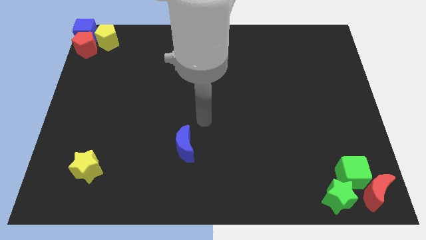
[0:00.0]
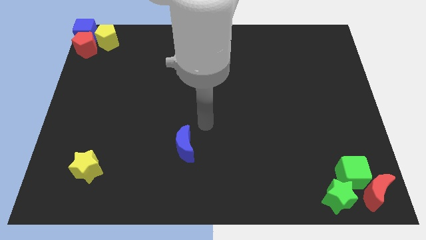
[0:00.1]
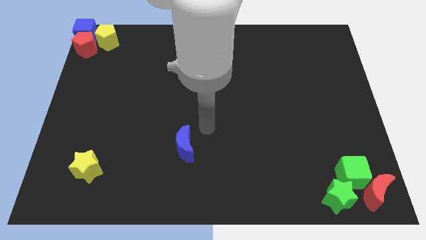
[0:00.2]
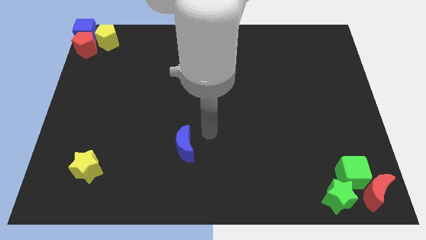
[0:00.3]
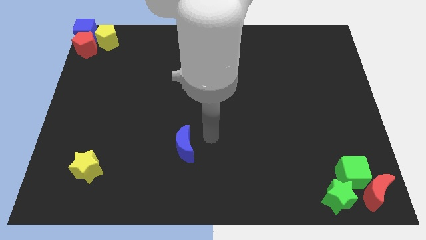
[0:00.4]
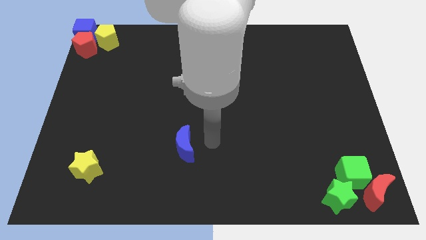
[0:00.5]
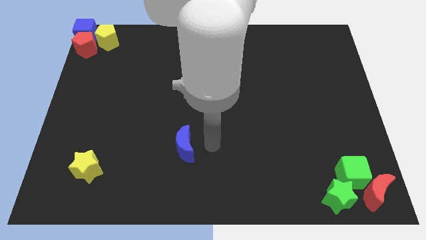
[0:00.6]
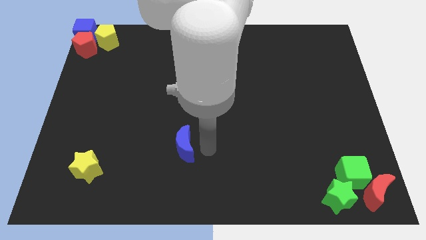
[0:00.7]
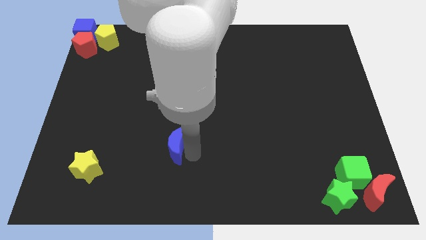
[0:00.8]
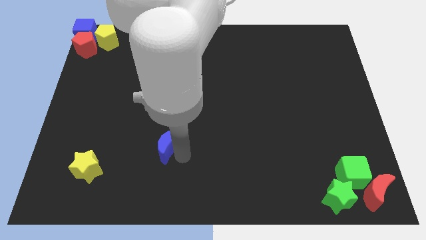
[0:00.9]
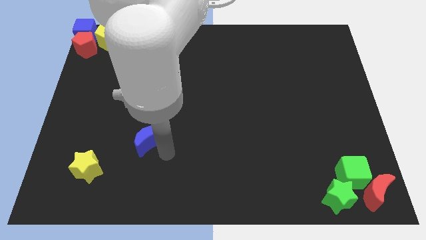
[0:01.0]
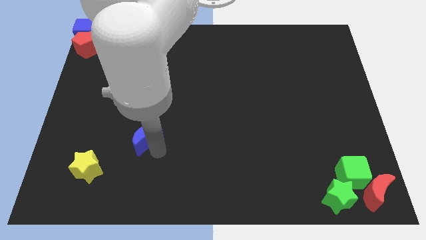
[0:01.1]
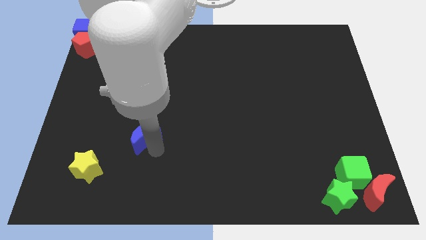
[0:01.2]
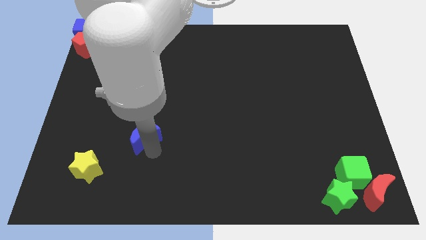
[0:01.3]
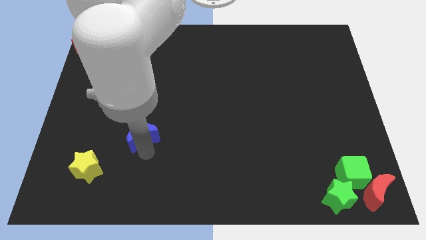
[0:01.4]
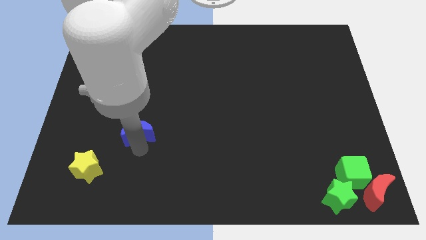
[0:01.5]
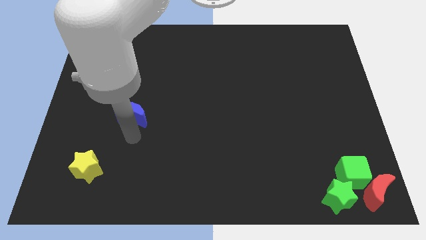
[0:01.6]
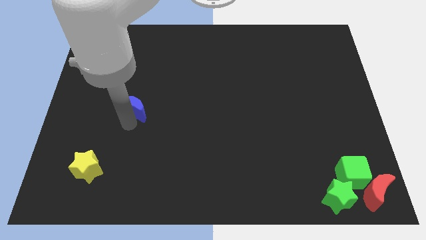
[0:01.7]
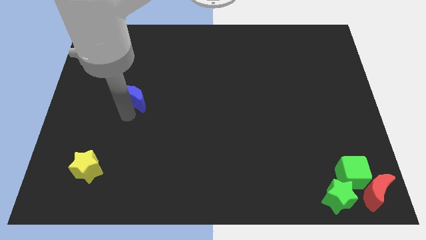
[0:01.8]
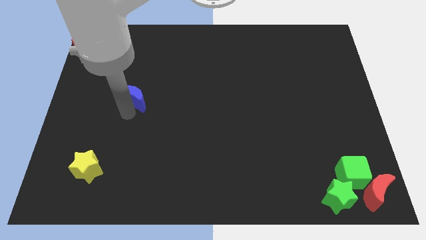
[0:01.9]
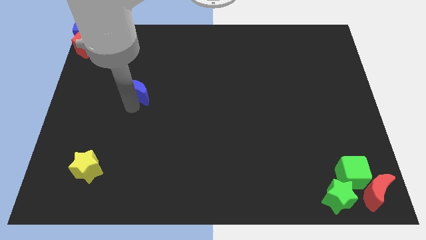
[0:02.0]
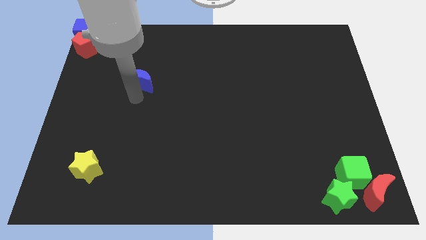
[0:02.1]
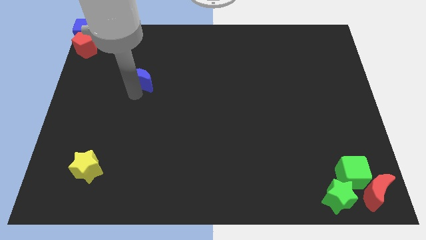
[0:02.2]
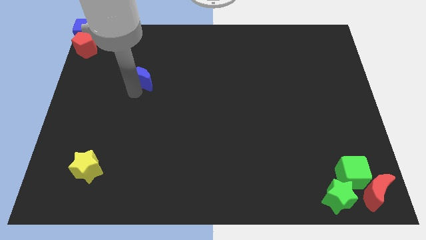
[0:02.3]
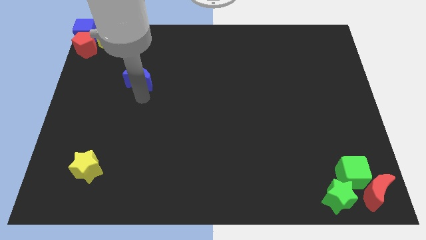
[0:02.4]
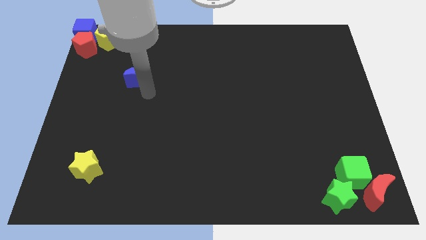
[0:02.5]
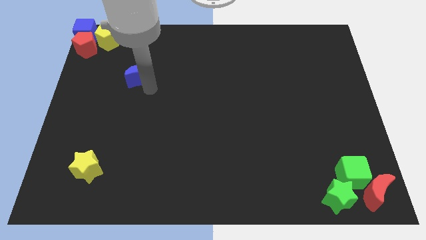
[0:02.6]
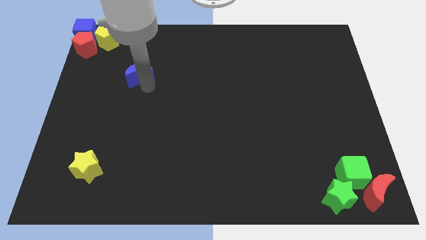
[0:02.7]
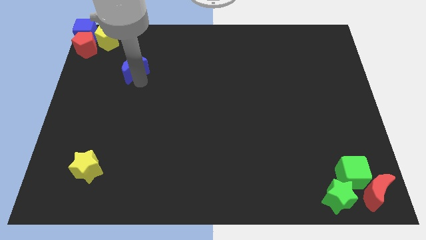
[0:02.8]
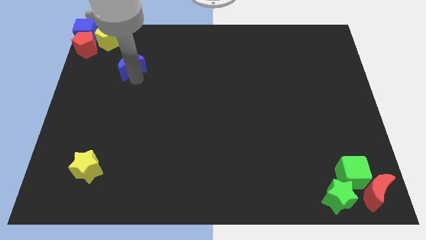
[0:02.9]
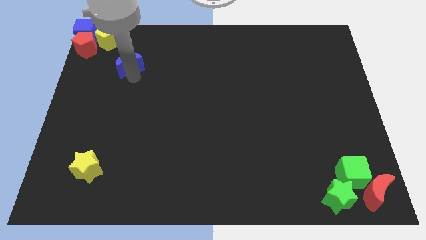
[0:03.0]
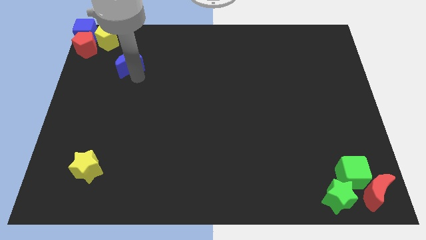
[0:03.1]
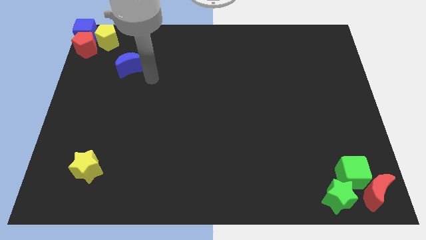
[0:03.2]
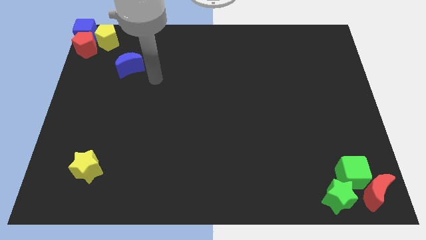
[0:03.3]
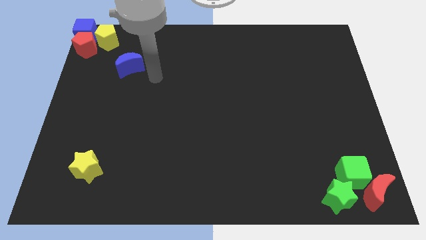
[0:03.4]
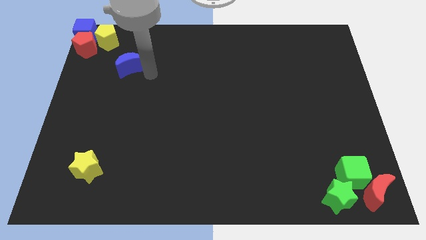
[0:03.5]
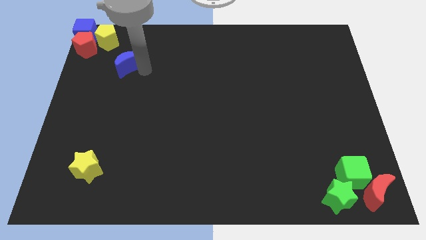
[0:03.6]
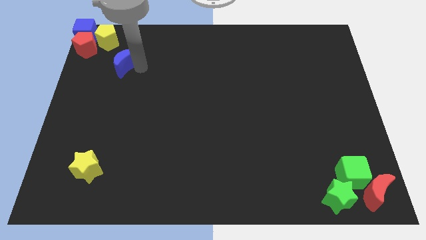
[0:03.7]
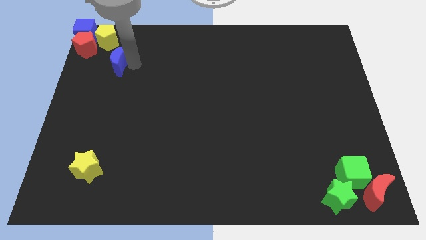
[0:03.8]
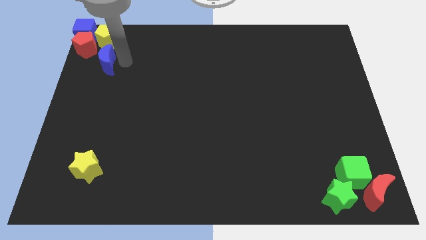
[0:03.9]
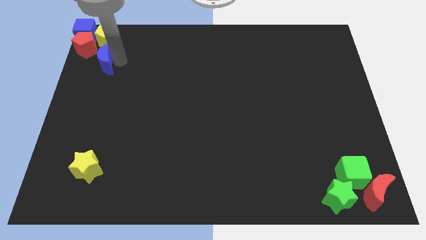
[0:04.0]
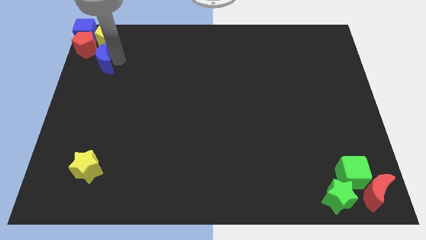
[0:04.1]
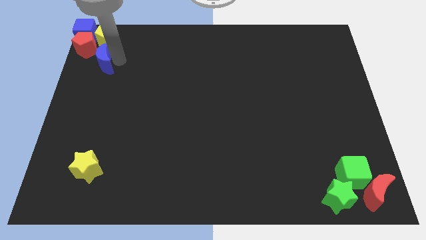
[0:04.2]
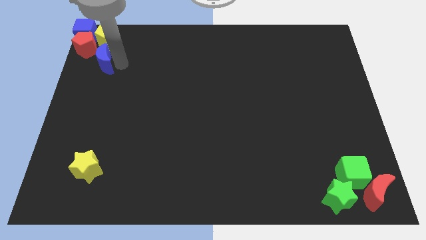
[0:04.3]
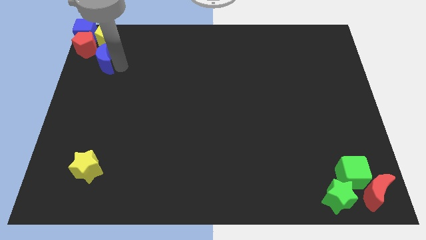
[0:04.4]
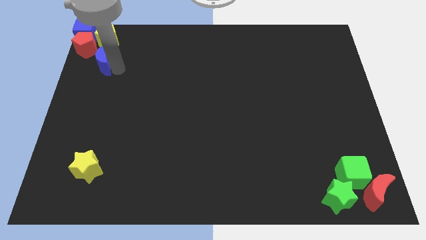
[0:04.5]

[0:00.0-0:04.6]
push the the blue crescent to the bottom of the yellow pentagon

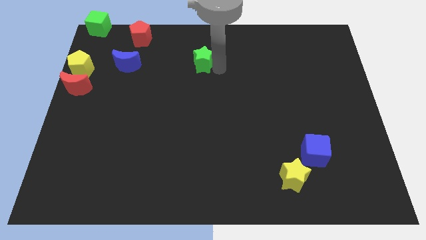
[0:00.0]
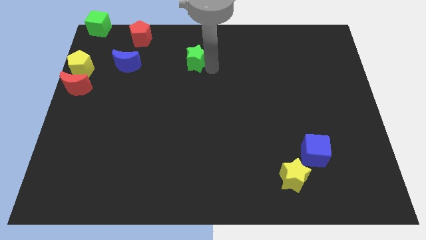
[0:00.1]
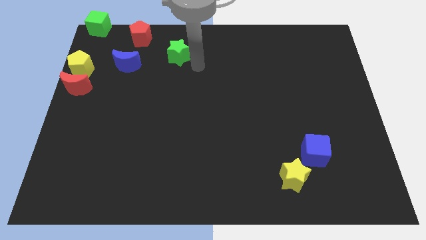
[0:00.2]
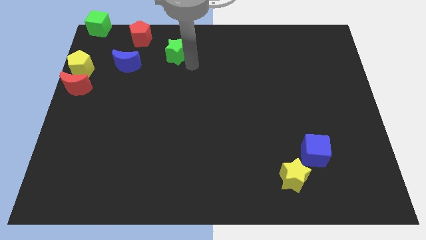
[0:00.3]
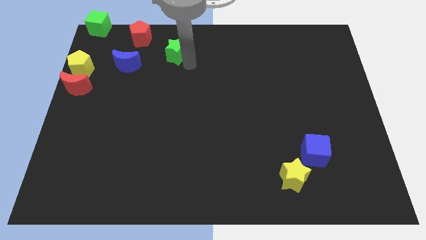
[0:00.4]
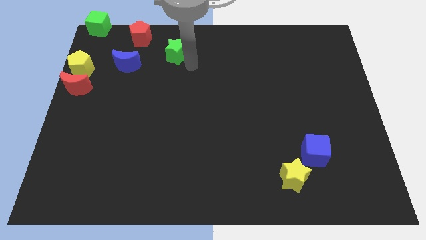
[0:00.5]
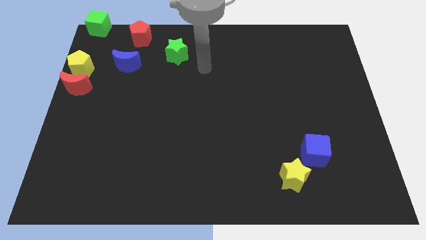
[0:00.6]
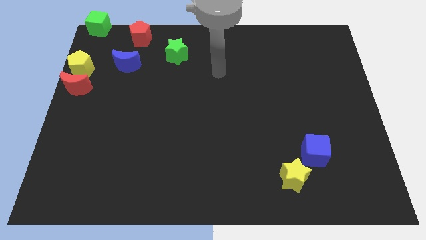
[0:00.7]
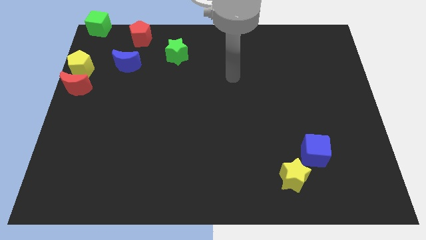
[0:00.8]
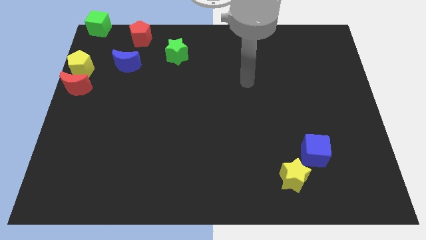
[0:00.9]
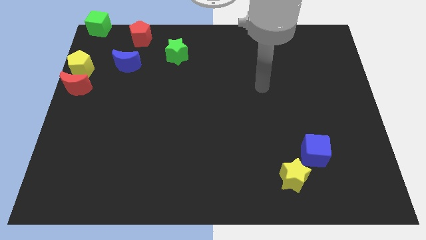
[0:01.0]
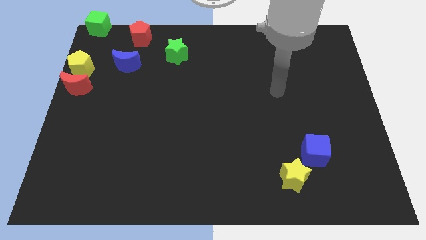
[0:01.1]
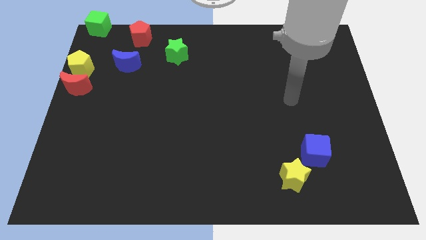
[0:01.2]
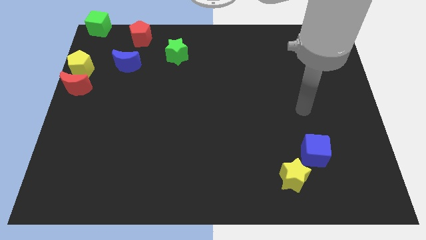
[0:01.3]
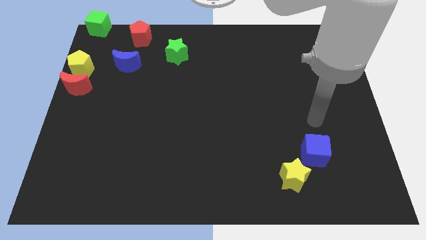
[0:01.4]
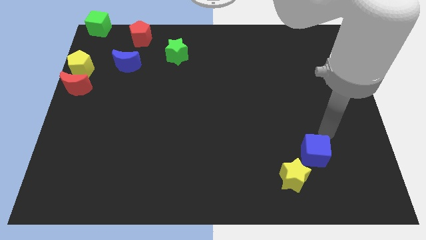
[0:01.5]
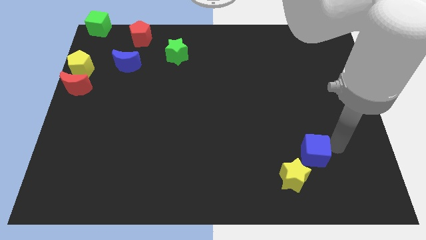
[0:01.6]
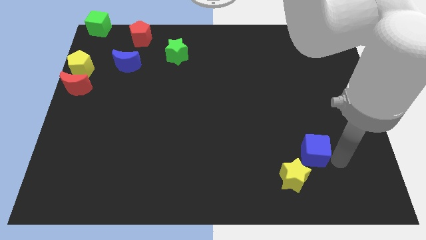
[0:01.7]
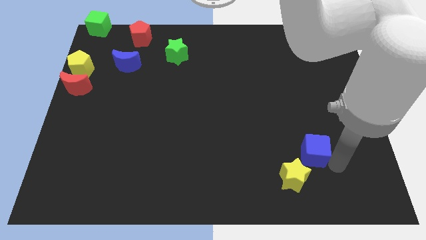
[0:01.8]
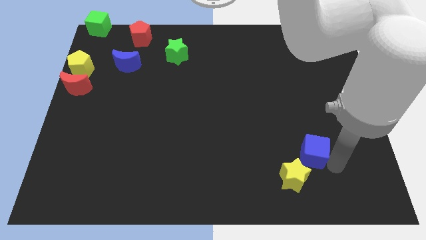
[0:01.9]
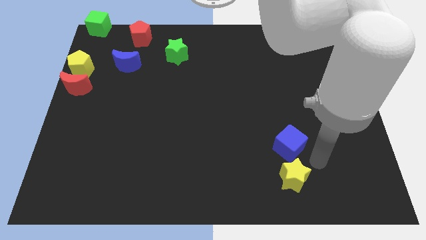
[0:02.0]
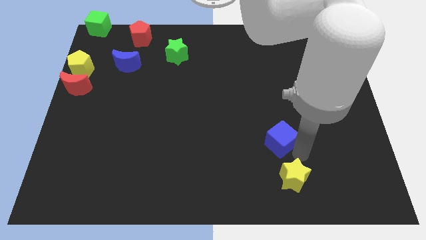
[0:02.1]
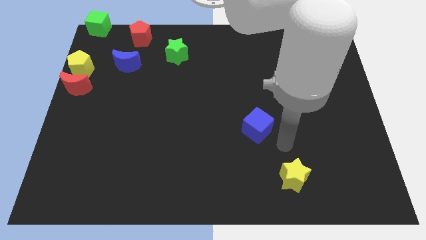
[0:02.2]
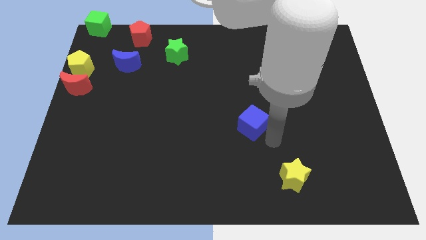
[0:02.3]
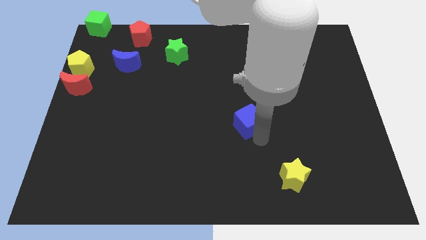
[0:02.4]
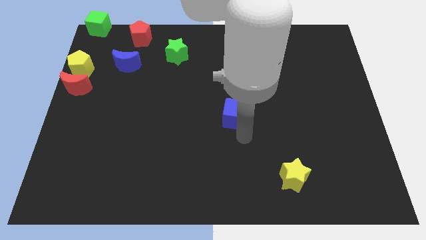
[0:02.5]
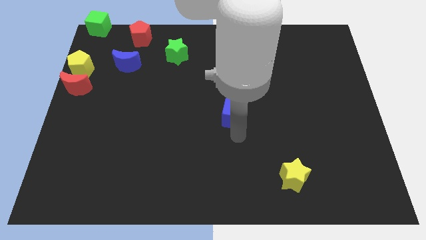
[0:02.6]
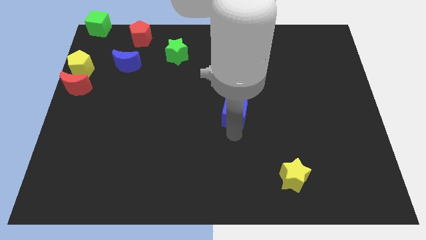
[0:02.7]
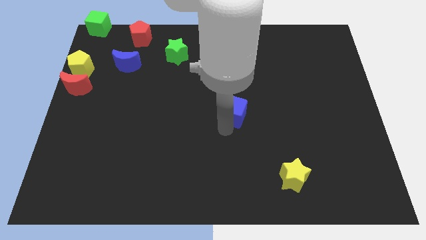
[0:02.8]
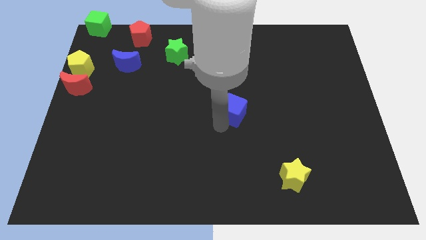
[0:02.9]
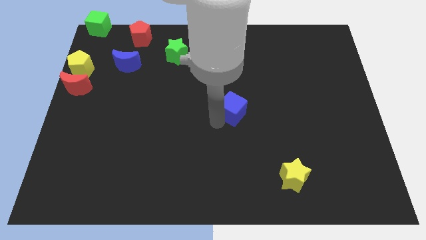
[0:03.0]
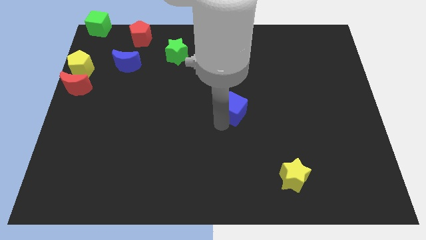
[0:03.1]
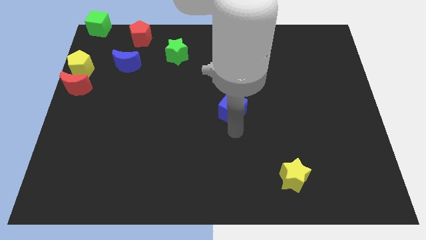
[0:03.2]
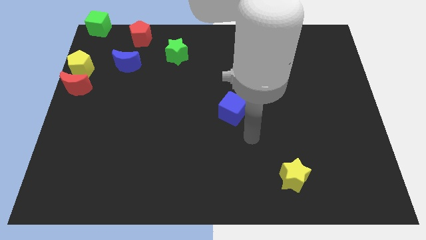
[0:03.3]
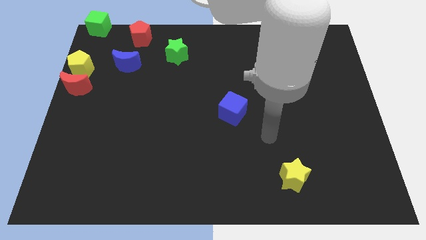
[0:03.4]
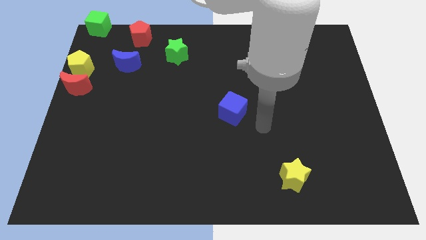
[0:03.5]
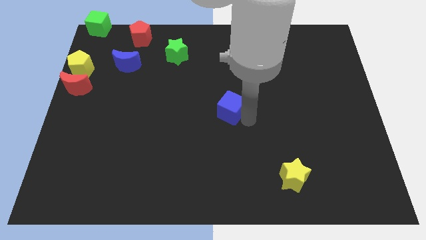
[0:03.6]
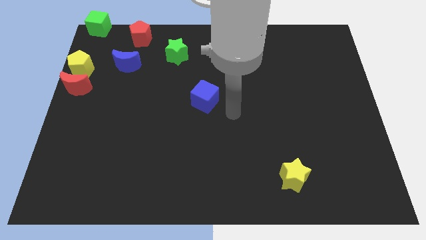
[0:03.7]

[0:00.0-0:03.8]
place the blue cube to the center of the board

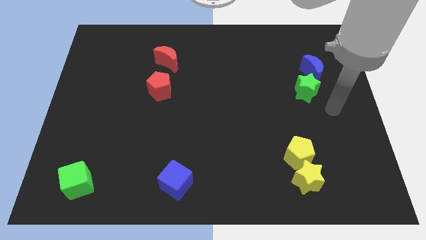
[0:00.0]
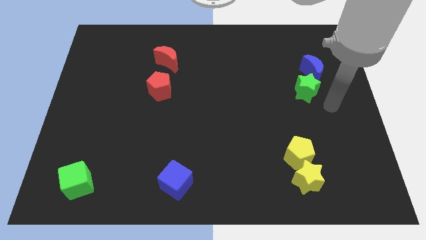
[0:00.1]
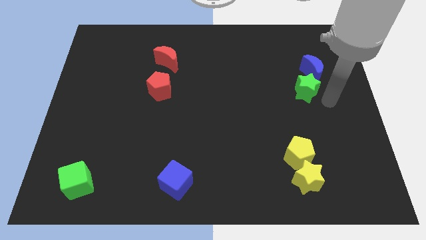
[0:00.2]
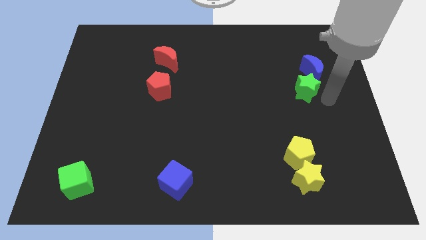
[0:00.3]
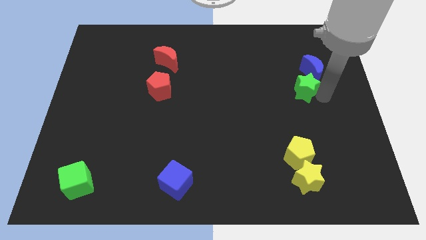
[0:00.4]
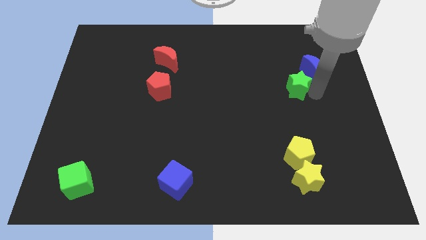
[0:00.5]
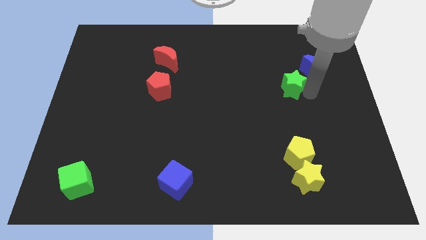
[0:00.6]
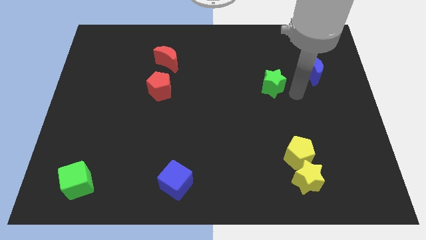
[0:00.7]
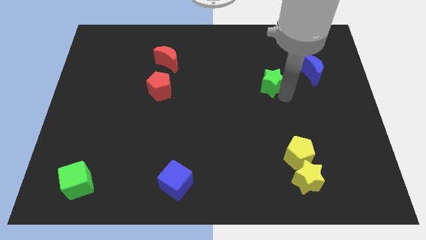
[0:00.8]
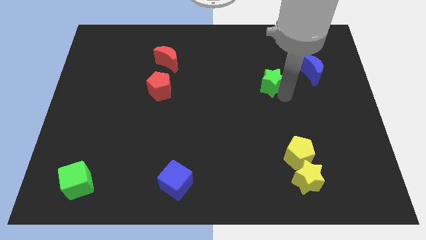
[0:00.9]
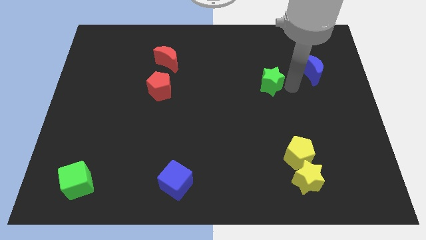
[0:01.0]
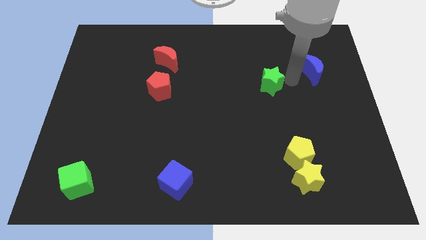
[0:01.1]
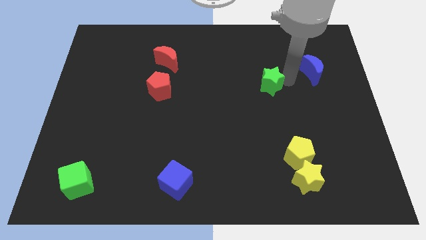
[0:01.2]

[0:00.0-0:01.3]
separate green star from blue moon
